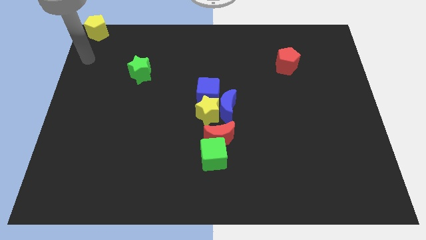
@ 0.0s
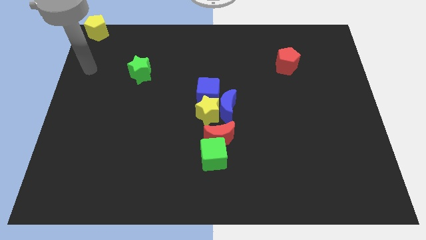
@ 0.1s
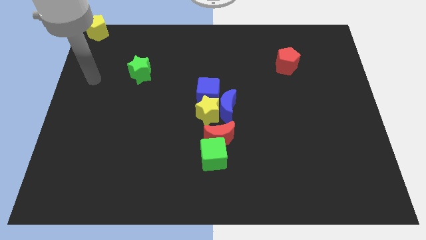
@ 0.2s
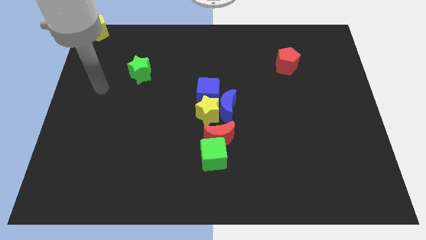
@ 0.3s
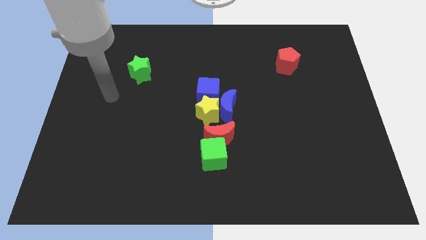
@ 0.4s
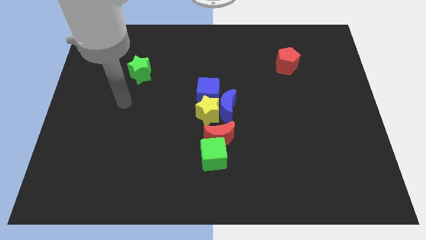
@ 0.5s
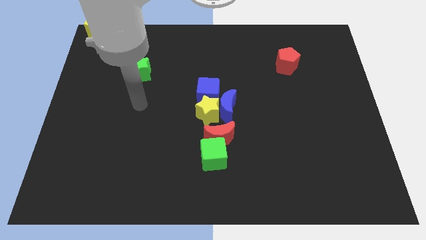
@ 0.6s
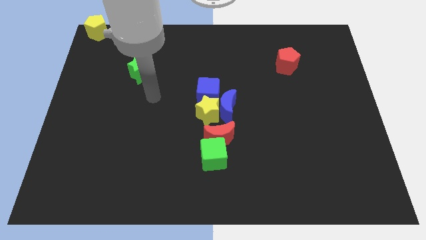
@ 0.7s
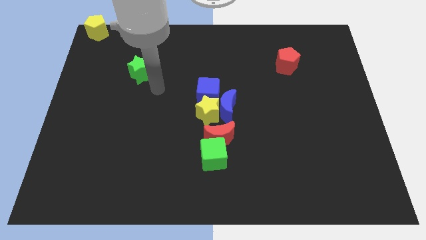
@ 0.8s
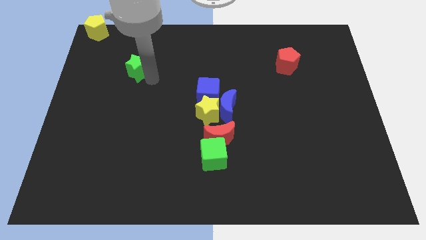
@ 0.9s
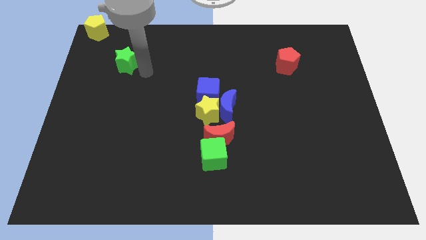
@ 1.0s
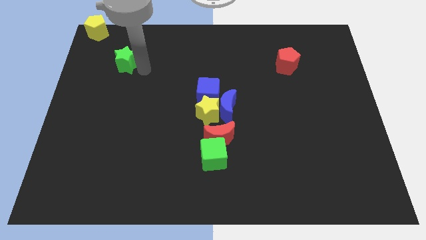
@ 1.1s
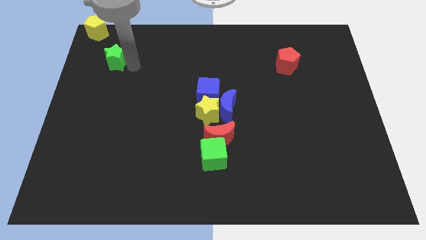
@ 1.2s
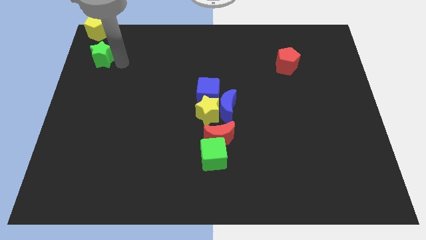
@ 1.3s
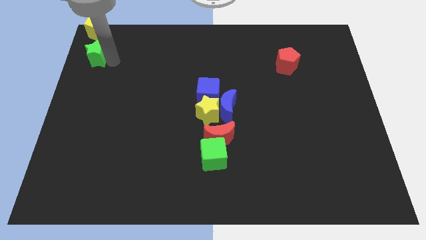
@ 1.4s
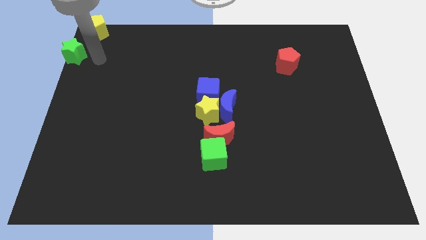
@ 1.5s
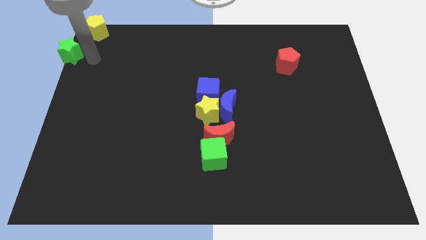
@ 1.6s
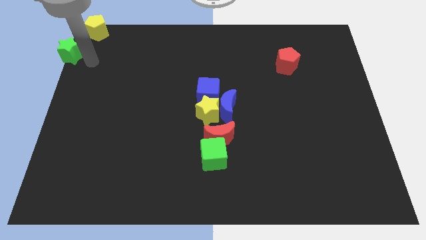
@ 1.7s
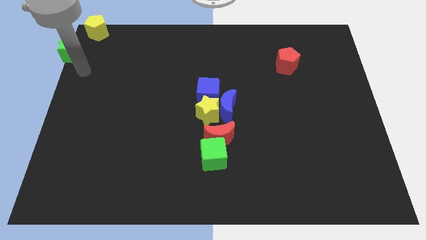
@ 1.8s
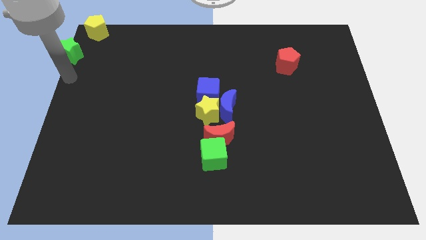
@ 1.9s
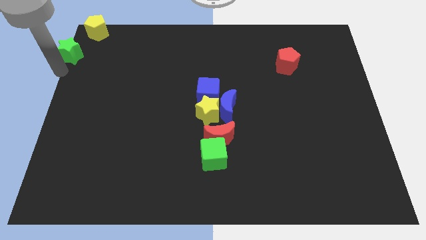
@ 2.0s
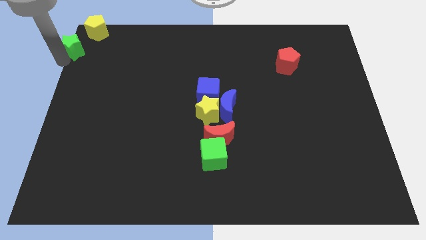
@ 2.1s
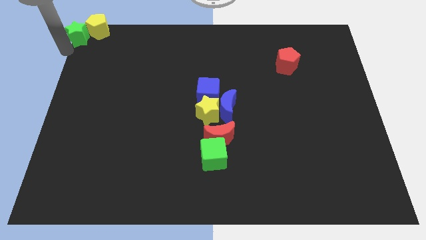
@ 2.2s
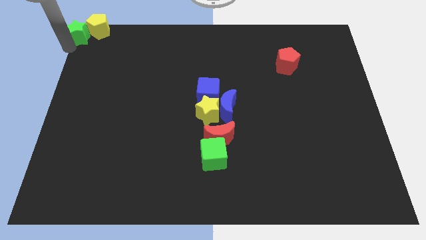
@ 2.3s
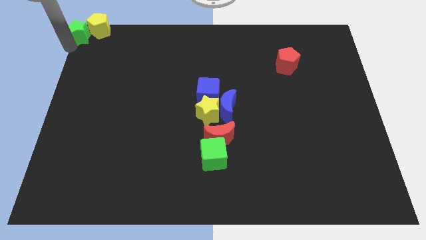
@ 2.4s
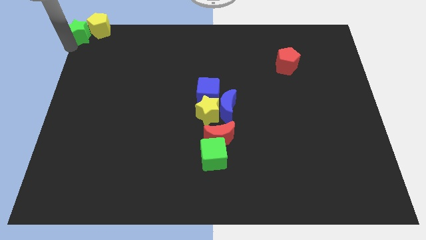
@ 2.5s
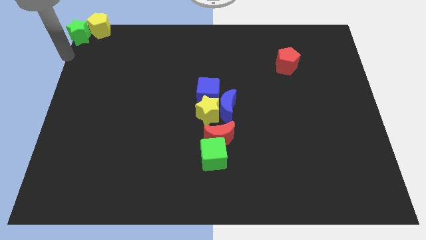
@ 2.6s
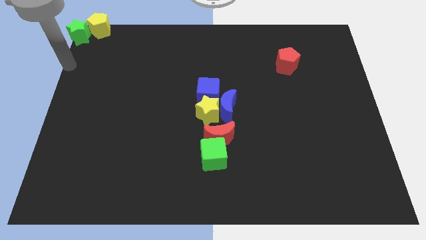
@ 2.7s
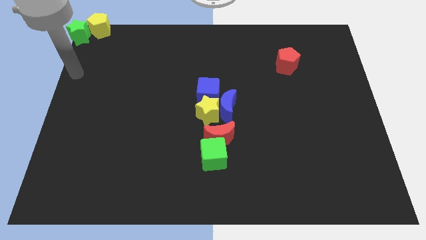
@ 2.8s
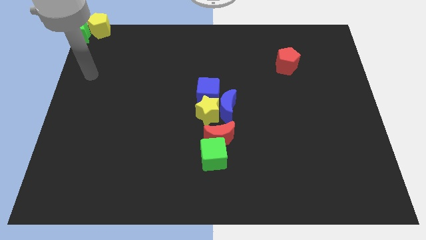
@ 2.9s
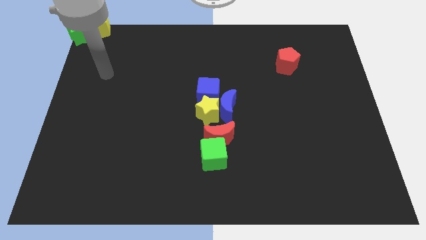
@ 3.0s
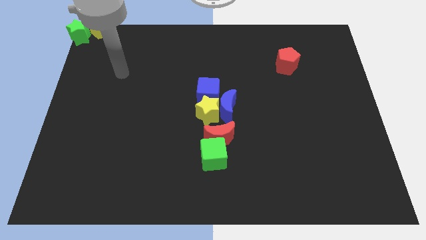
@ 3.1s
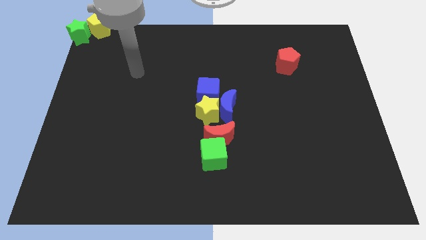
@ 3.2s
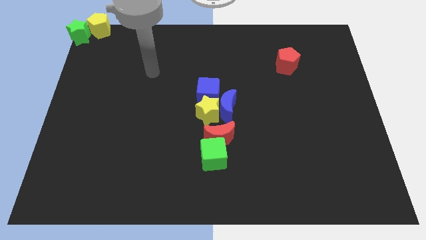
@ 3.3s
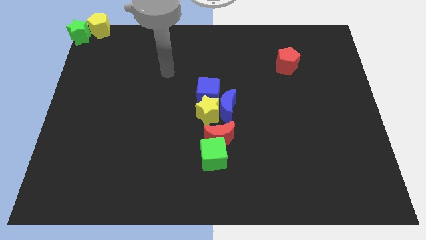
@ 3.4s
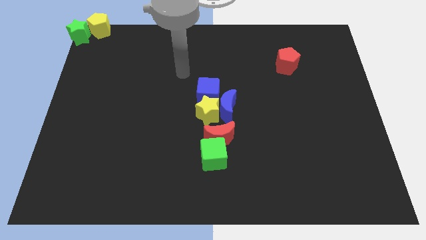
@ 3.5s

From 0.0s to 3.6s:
move the green star to the top left of the board

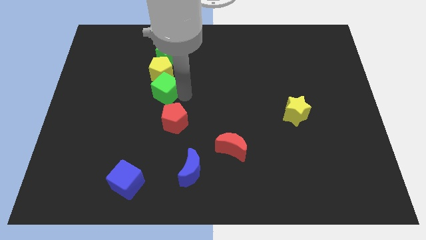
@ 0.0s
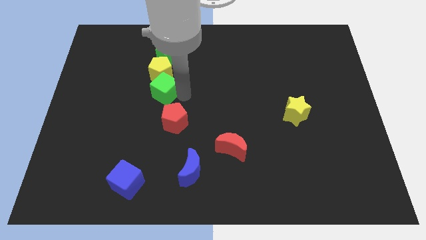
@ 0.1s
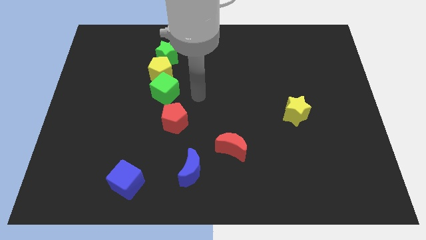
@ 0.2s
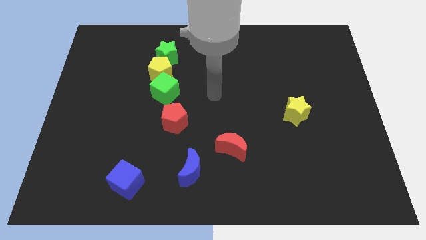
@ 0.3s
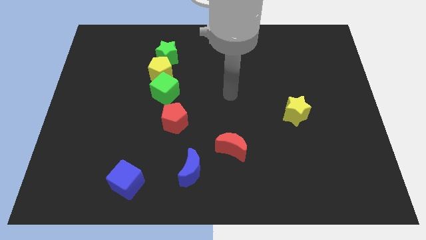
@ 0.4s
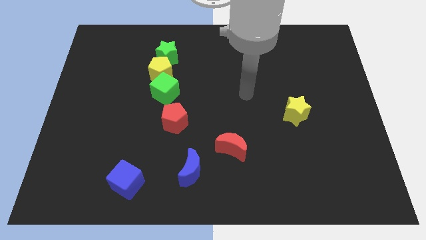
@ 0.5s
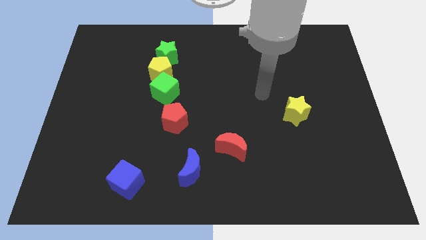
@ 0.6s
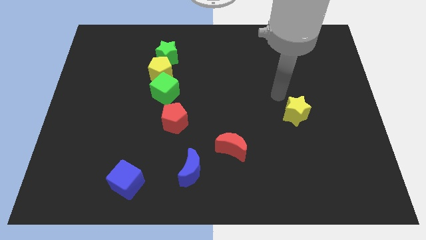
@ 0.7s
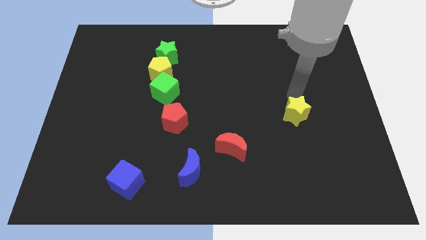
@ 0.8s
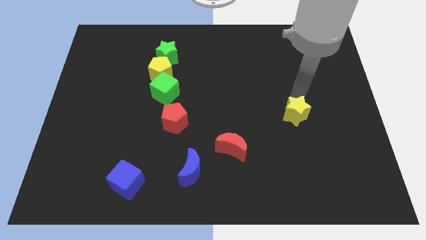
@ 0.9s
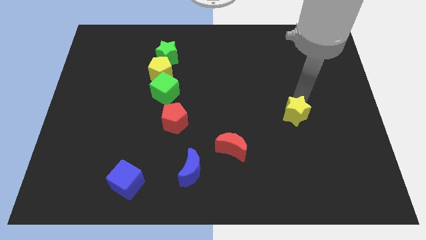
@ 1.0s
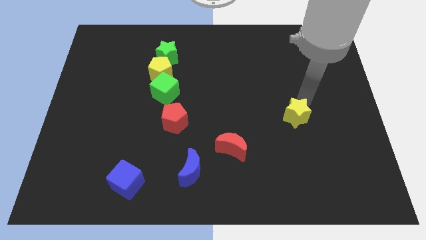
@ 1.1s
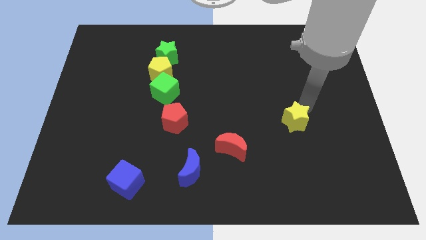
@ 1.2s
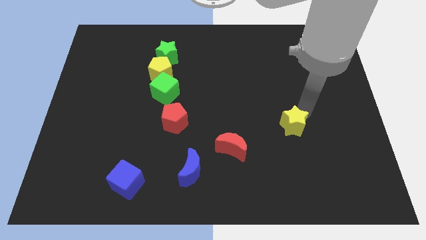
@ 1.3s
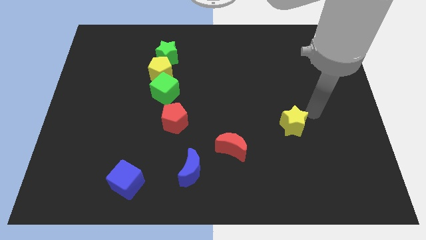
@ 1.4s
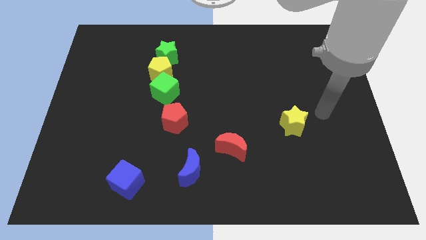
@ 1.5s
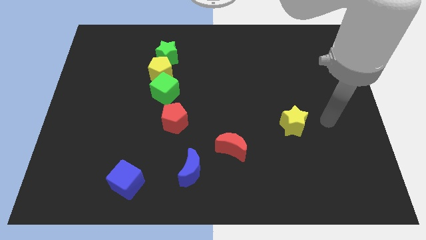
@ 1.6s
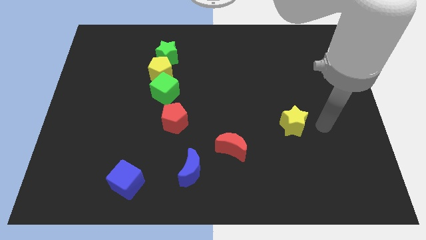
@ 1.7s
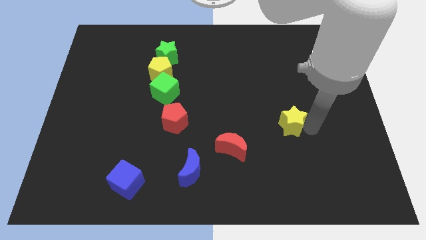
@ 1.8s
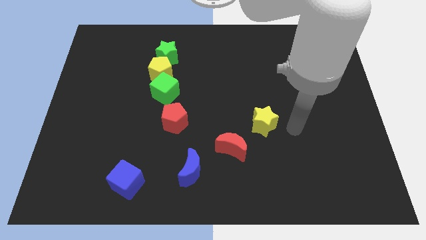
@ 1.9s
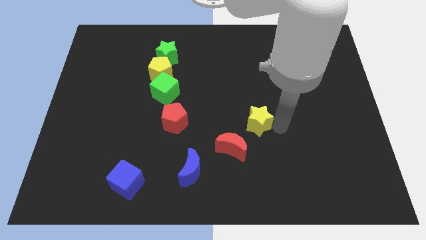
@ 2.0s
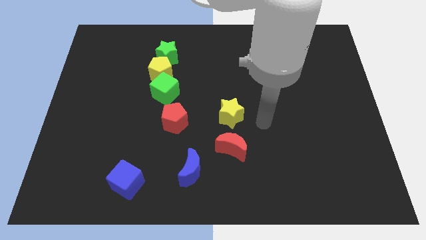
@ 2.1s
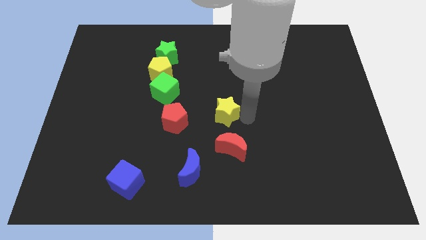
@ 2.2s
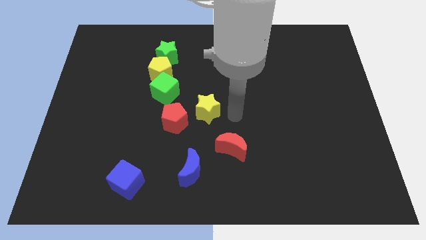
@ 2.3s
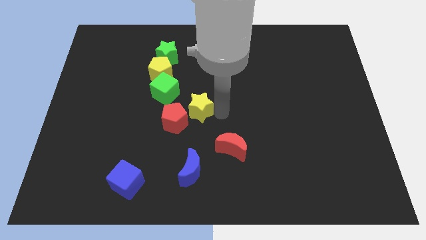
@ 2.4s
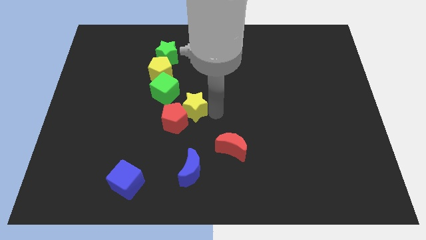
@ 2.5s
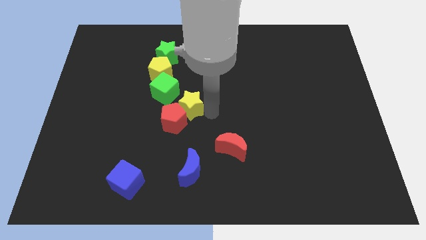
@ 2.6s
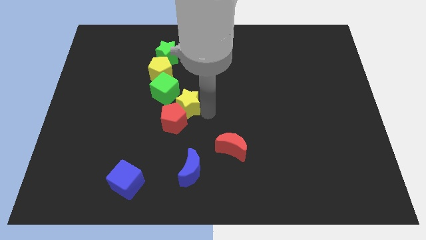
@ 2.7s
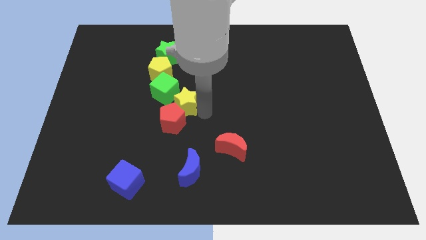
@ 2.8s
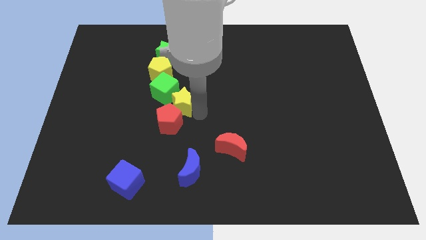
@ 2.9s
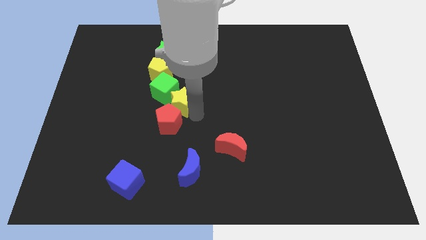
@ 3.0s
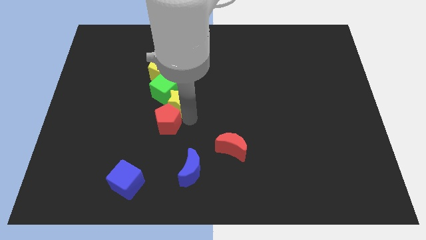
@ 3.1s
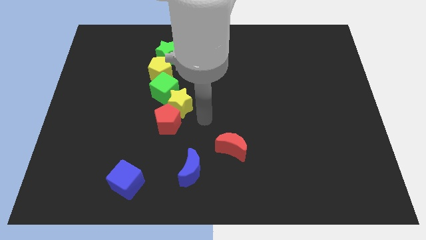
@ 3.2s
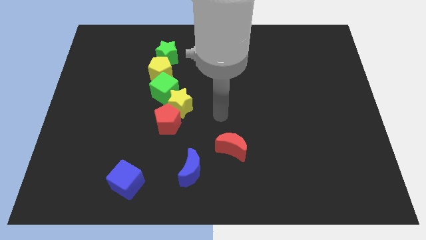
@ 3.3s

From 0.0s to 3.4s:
place the yellow star diagonally to the right bottom of the green cube

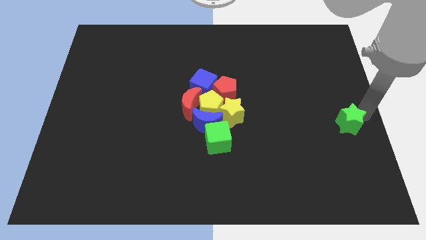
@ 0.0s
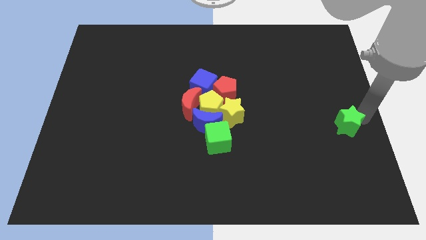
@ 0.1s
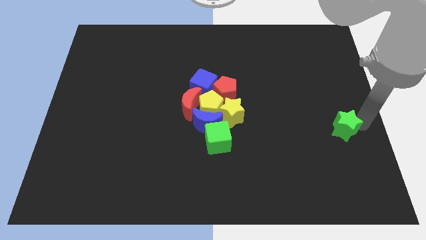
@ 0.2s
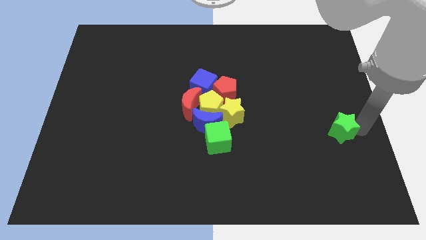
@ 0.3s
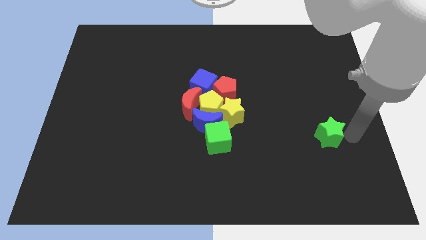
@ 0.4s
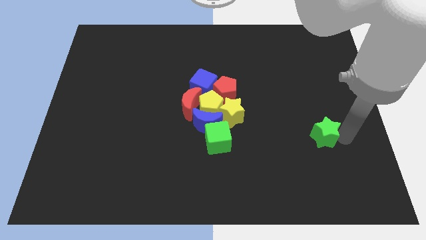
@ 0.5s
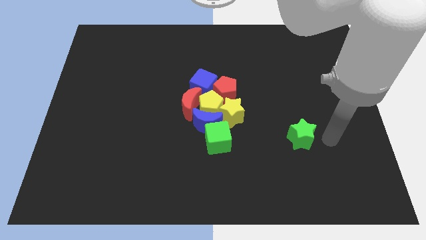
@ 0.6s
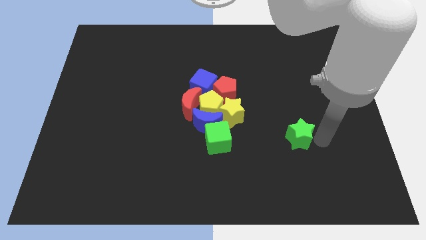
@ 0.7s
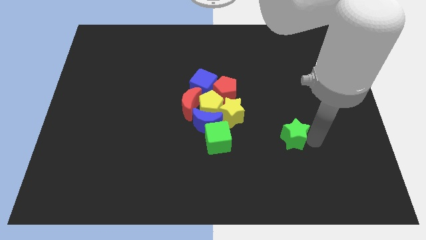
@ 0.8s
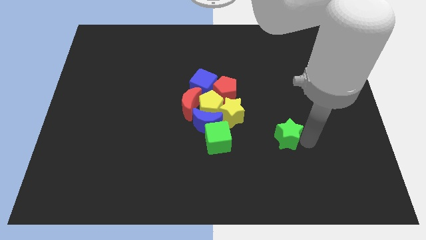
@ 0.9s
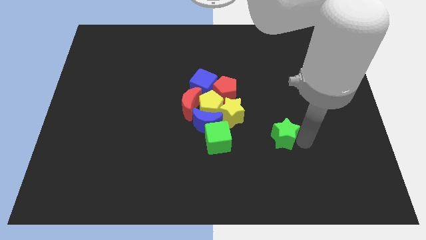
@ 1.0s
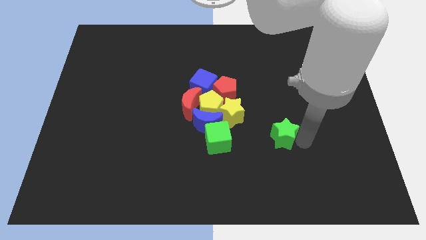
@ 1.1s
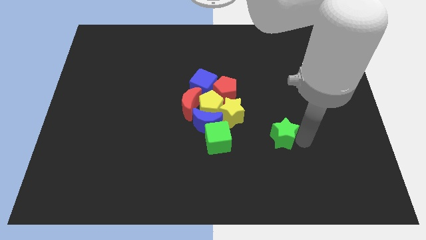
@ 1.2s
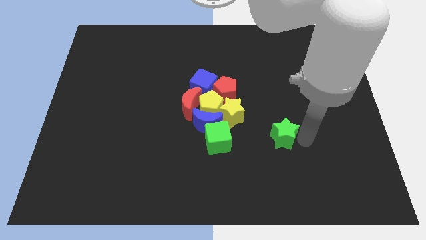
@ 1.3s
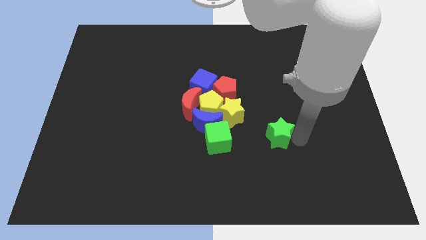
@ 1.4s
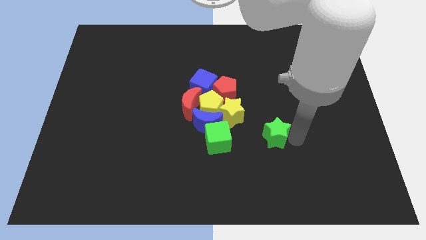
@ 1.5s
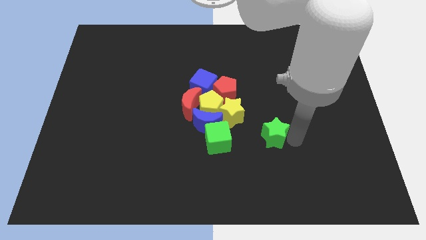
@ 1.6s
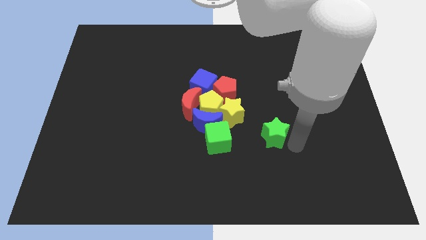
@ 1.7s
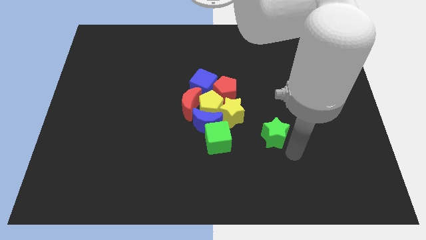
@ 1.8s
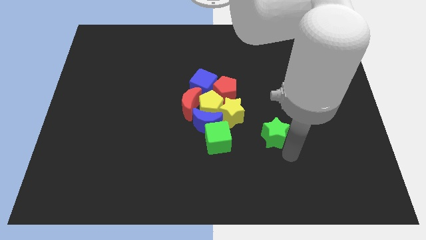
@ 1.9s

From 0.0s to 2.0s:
slide the green star towards the group of blocks
